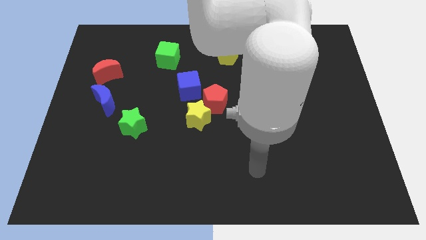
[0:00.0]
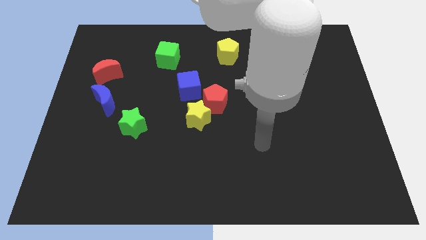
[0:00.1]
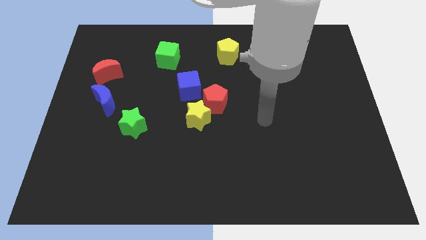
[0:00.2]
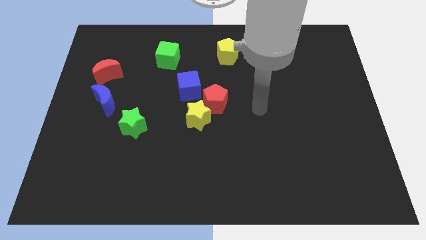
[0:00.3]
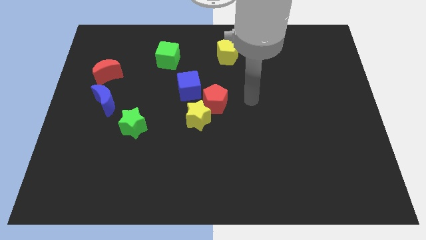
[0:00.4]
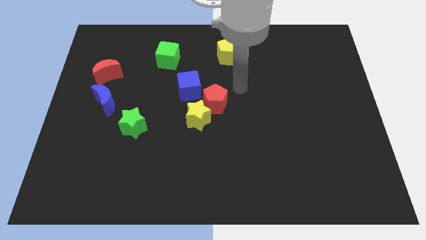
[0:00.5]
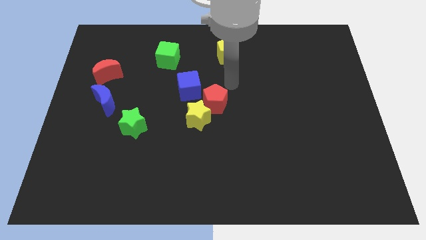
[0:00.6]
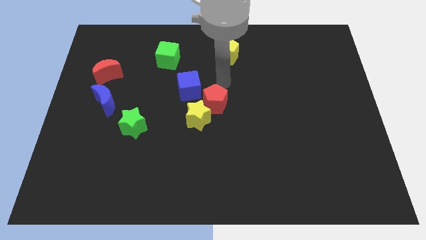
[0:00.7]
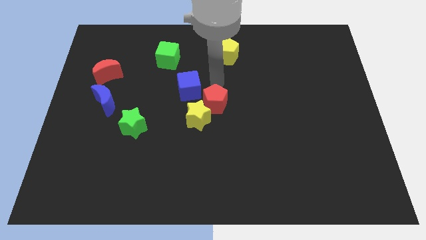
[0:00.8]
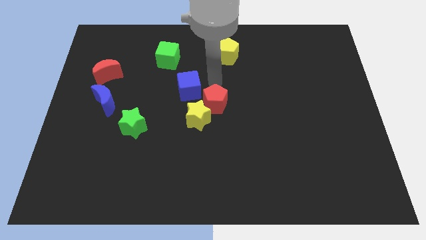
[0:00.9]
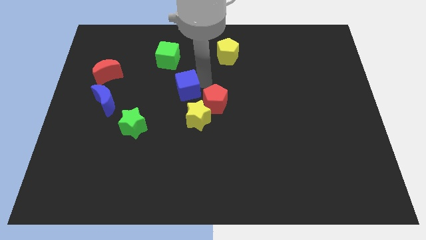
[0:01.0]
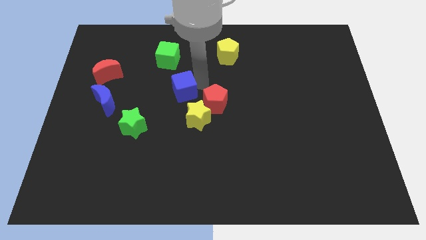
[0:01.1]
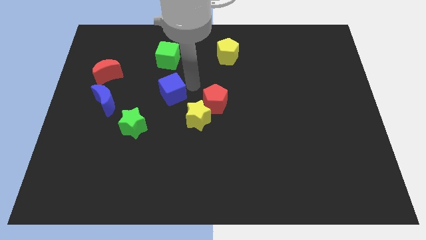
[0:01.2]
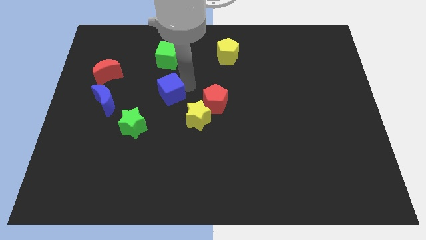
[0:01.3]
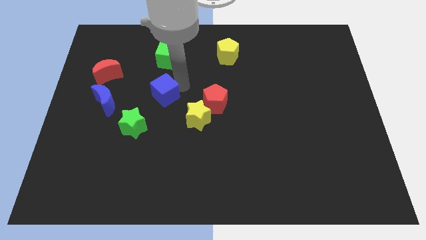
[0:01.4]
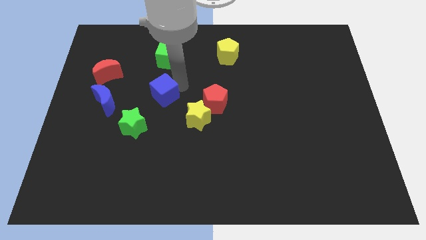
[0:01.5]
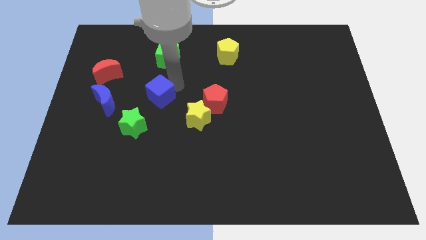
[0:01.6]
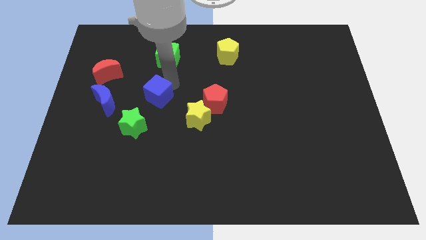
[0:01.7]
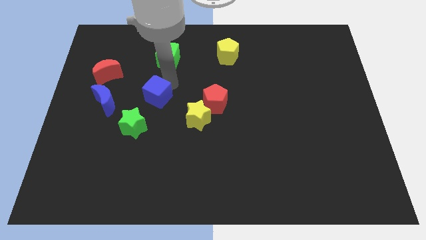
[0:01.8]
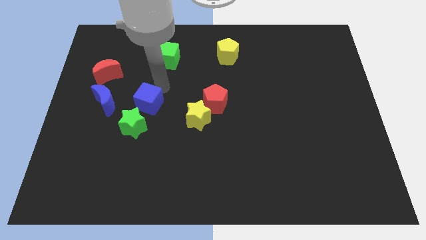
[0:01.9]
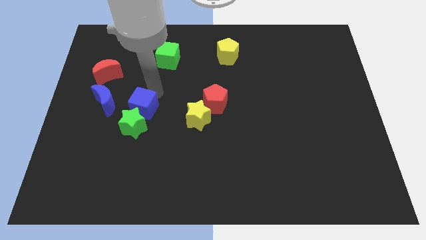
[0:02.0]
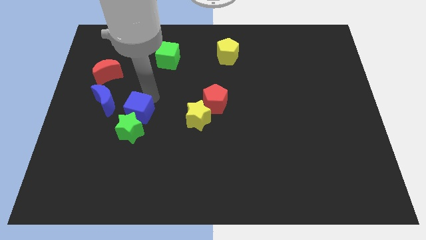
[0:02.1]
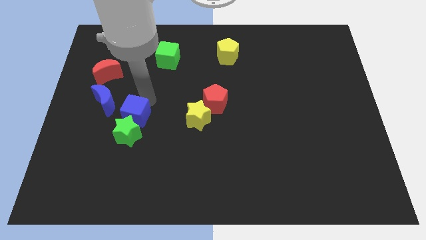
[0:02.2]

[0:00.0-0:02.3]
slide the blue cube close to the green star

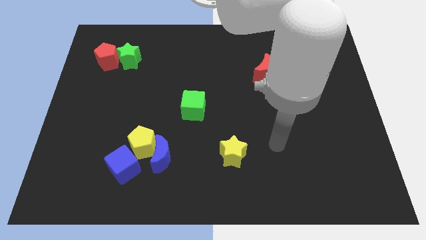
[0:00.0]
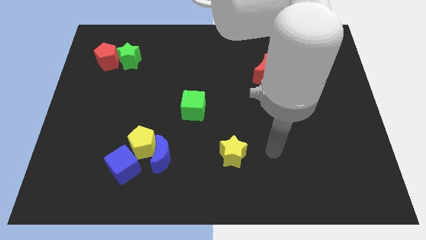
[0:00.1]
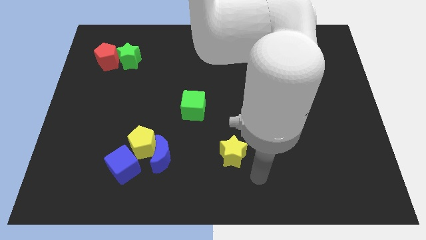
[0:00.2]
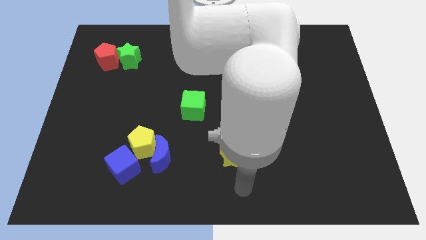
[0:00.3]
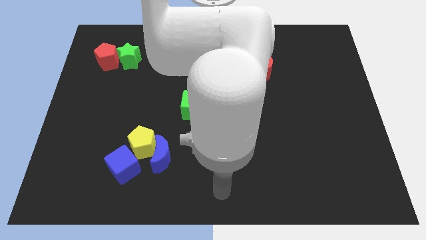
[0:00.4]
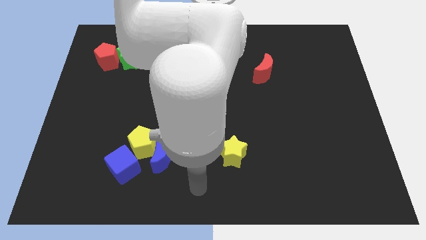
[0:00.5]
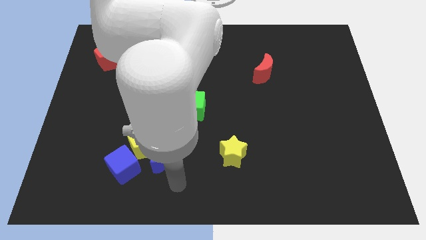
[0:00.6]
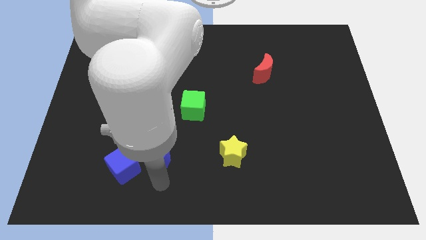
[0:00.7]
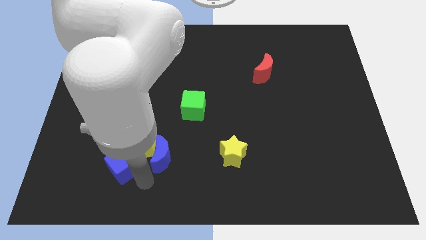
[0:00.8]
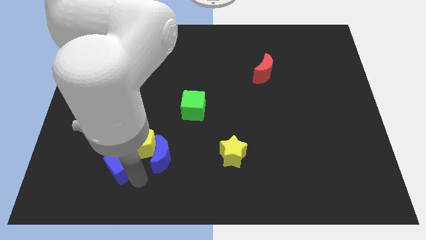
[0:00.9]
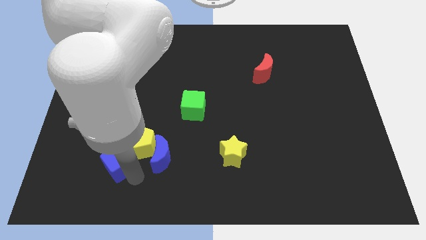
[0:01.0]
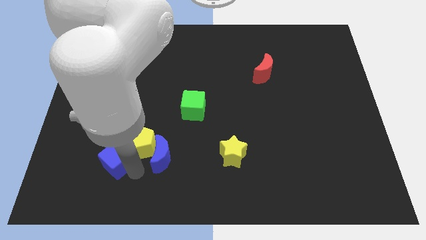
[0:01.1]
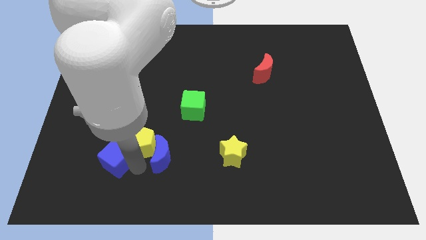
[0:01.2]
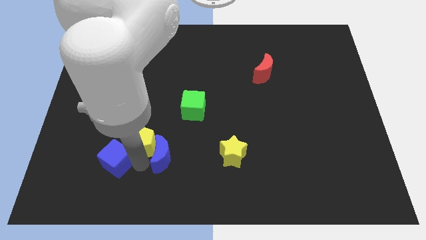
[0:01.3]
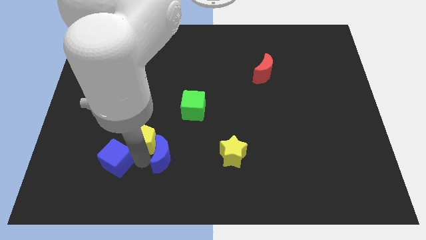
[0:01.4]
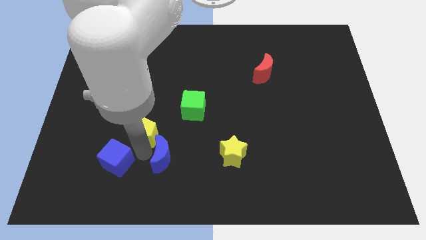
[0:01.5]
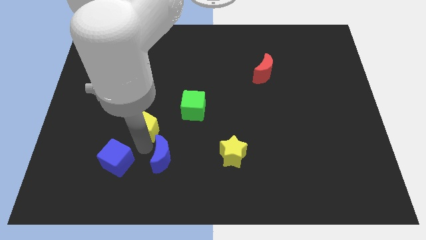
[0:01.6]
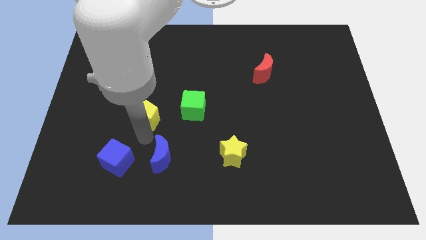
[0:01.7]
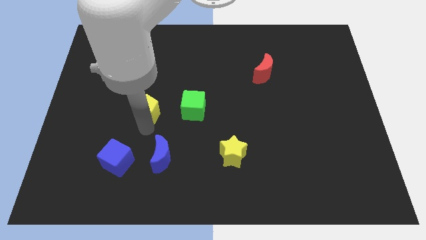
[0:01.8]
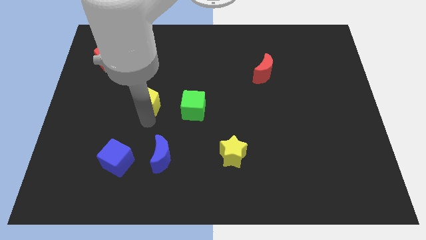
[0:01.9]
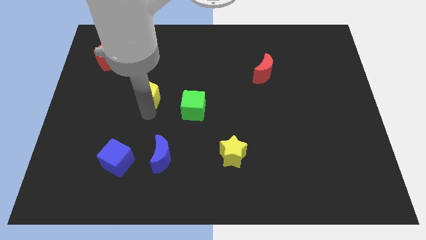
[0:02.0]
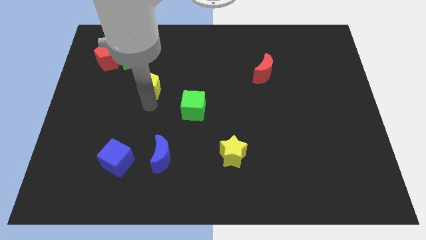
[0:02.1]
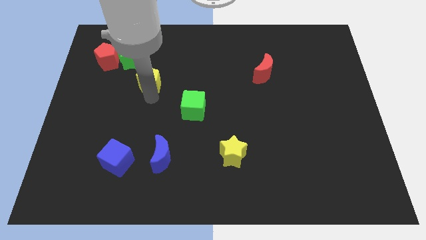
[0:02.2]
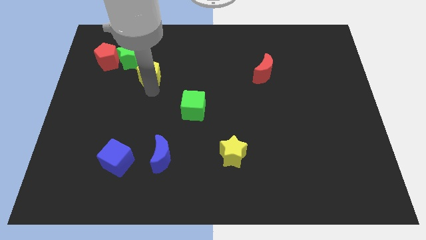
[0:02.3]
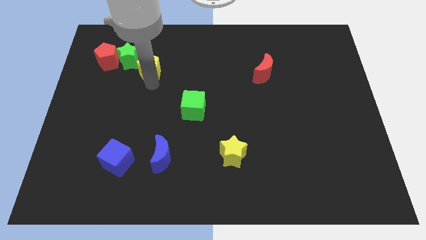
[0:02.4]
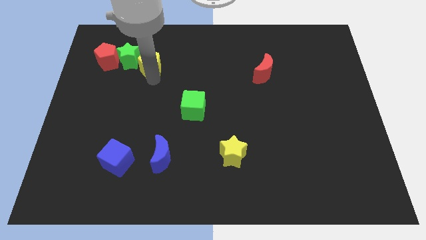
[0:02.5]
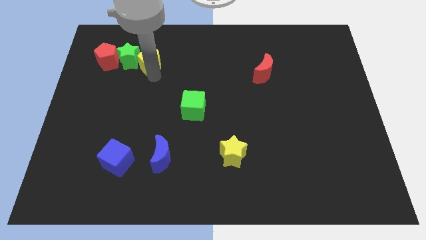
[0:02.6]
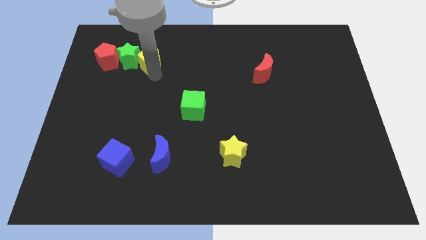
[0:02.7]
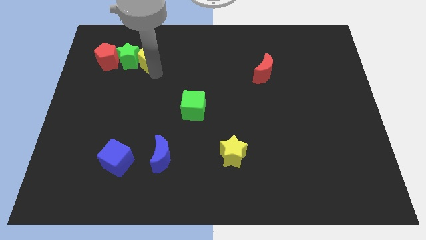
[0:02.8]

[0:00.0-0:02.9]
move the yellow pentagon towards the green star

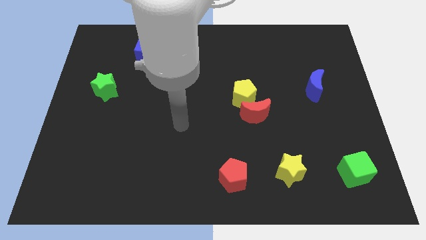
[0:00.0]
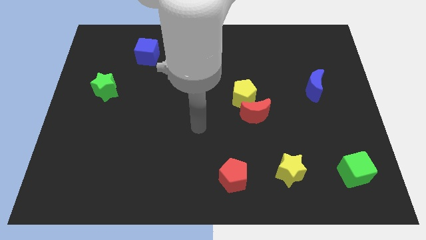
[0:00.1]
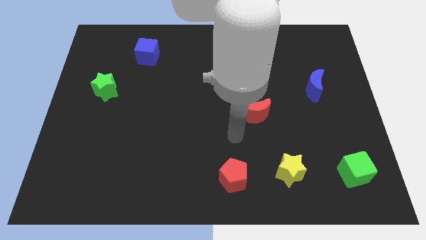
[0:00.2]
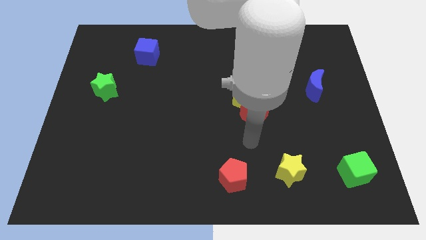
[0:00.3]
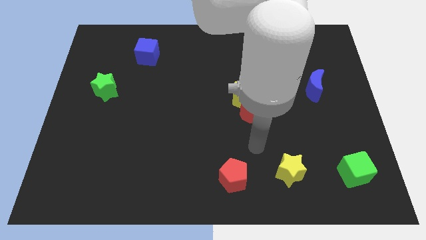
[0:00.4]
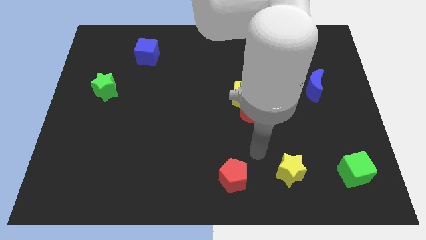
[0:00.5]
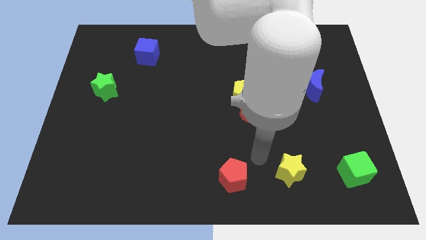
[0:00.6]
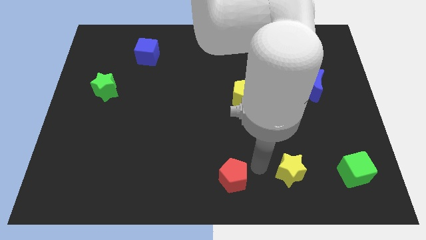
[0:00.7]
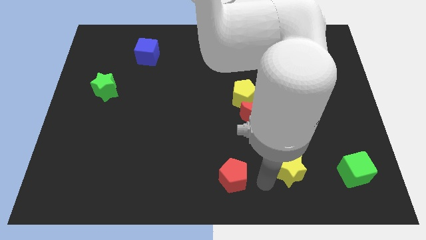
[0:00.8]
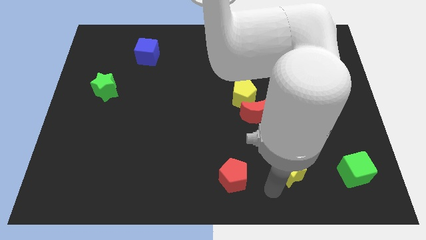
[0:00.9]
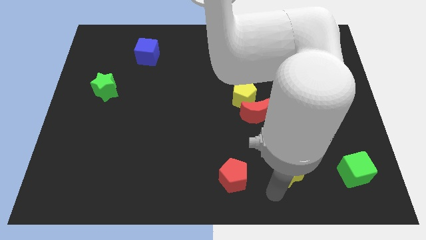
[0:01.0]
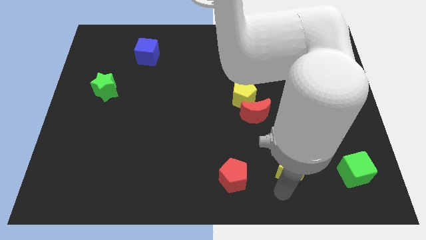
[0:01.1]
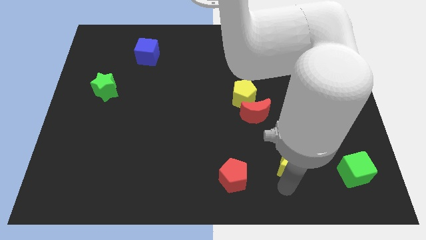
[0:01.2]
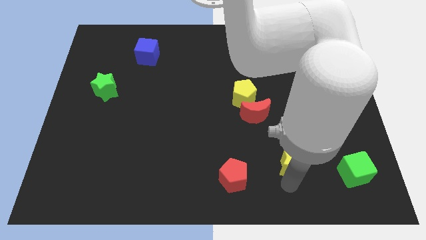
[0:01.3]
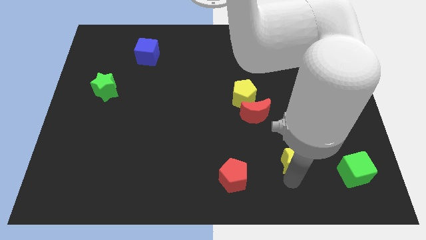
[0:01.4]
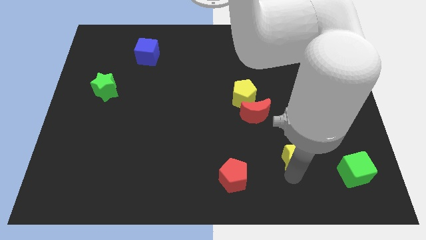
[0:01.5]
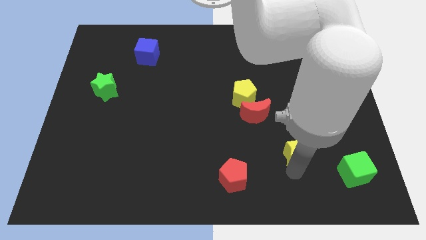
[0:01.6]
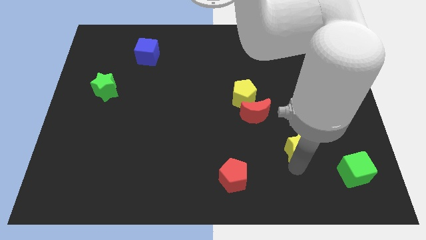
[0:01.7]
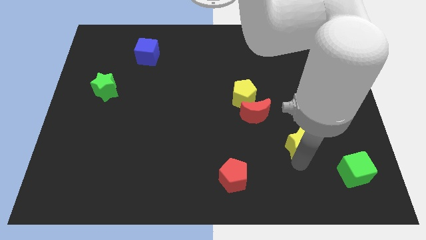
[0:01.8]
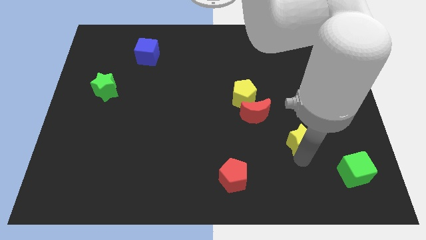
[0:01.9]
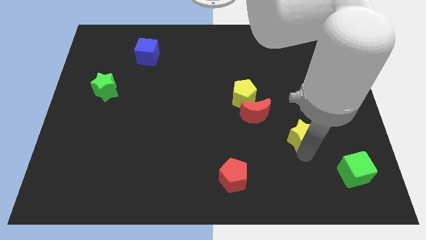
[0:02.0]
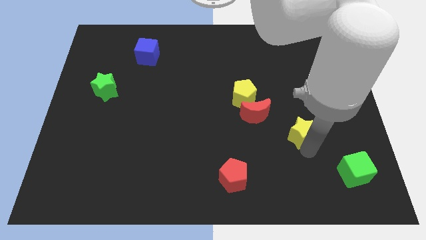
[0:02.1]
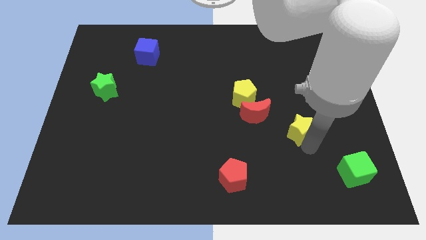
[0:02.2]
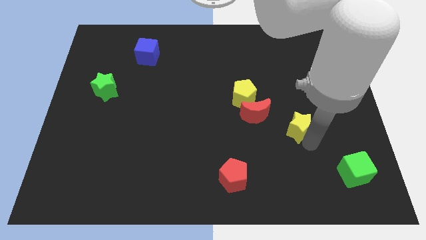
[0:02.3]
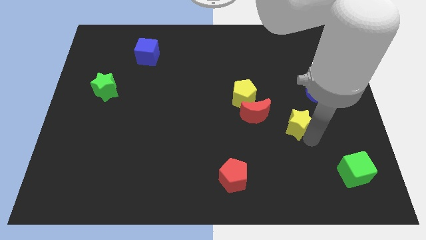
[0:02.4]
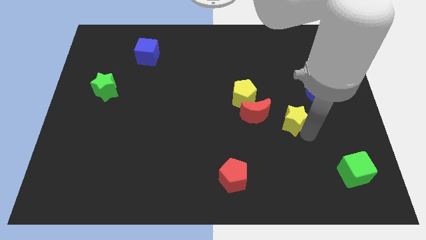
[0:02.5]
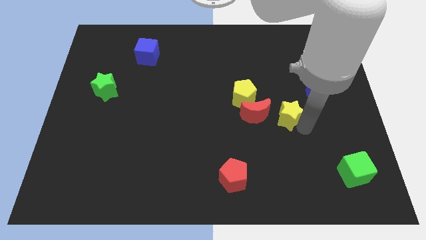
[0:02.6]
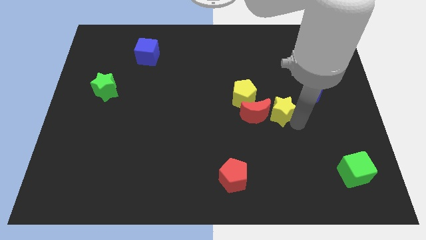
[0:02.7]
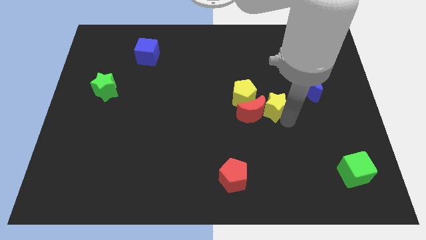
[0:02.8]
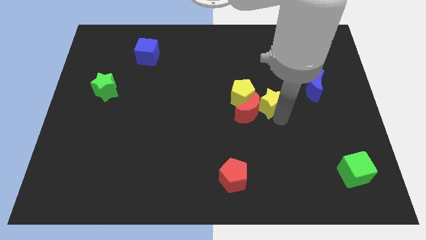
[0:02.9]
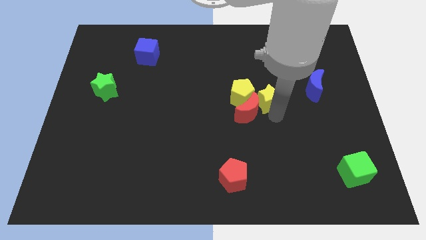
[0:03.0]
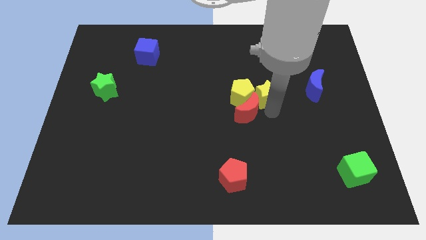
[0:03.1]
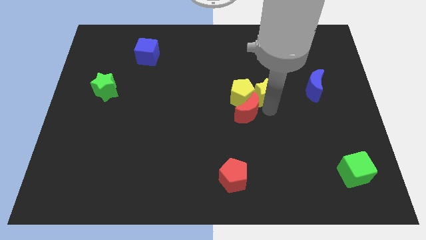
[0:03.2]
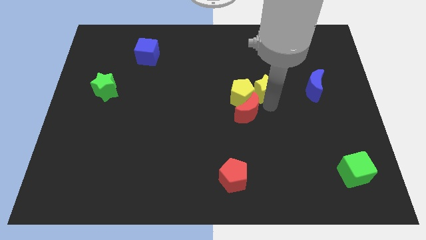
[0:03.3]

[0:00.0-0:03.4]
push the yellow star close to the yellow pentagon
